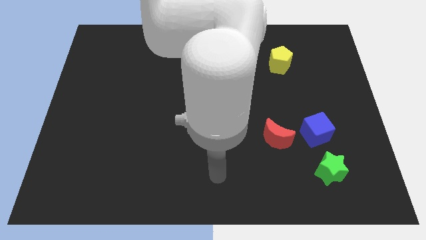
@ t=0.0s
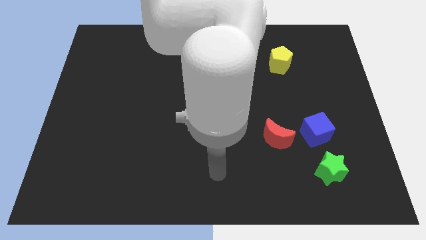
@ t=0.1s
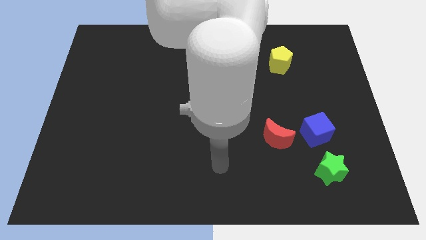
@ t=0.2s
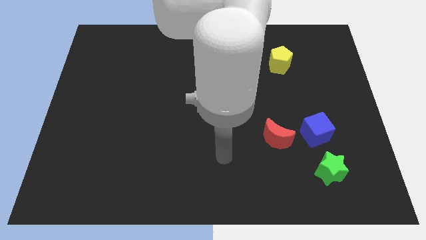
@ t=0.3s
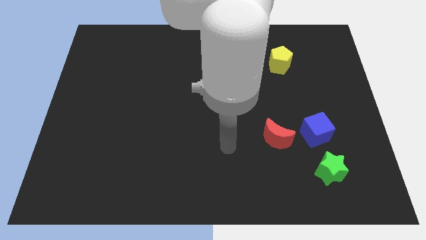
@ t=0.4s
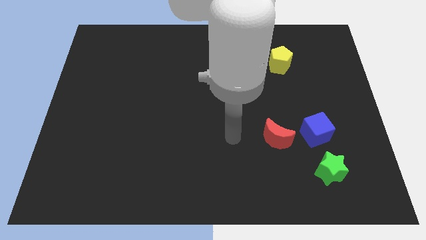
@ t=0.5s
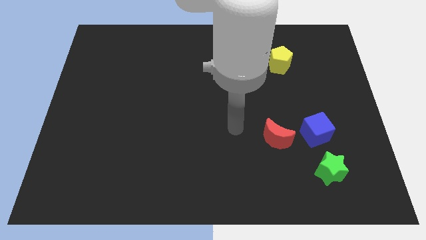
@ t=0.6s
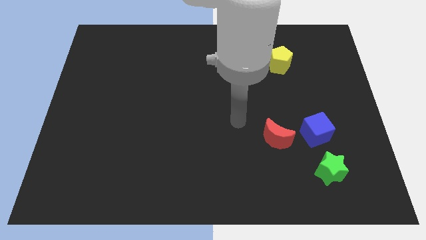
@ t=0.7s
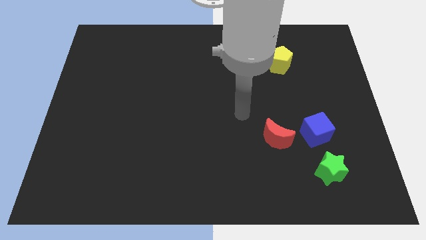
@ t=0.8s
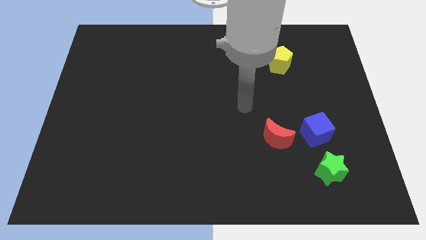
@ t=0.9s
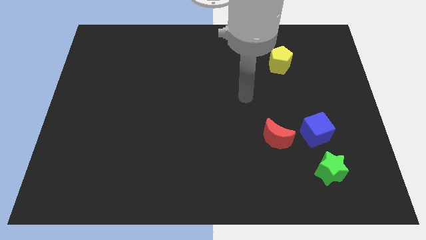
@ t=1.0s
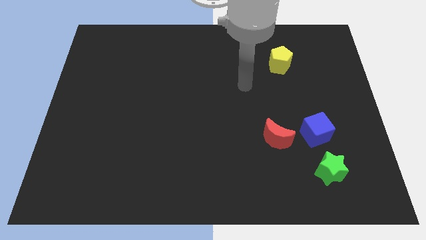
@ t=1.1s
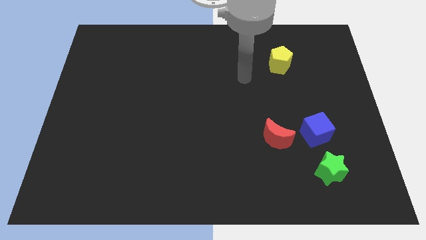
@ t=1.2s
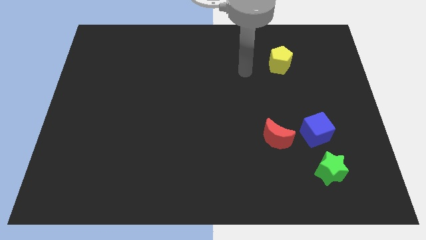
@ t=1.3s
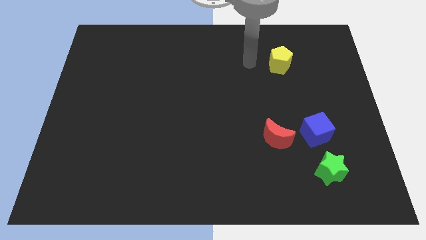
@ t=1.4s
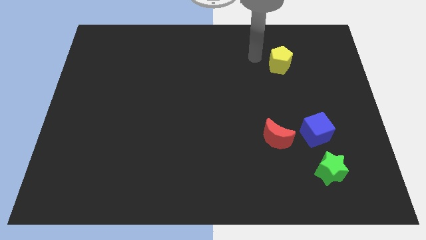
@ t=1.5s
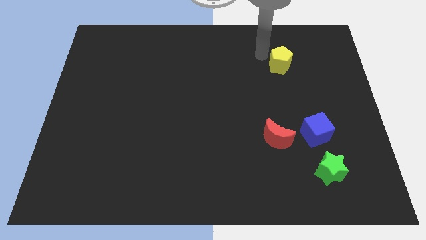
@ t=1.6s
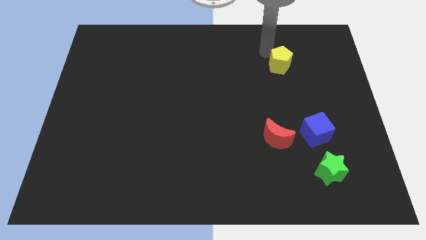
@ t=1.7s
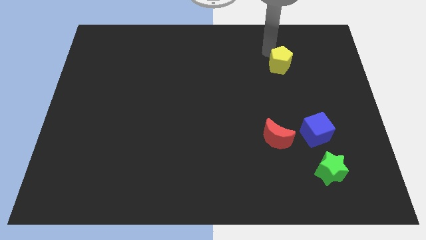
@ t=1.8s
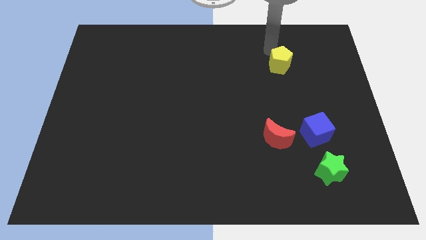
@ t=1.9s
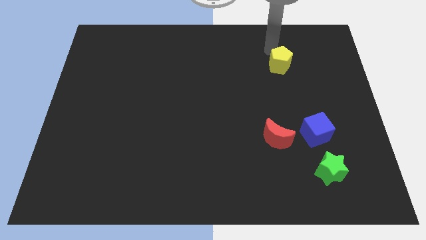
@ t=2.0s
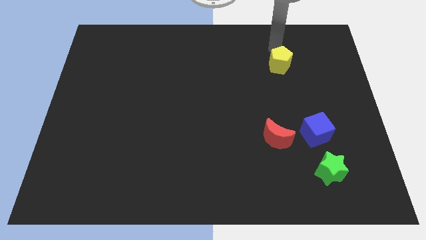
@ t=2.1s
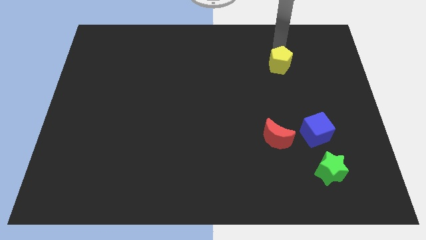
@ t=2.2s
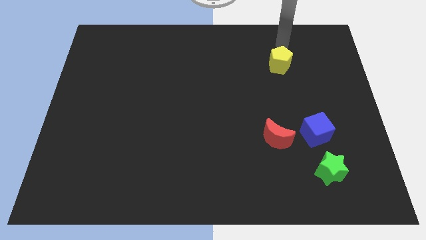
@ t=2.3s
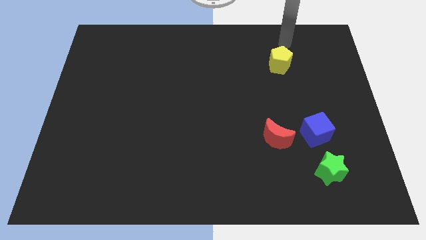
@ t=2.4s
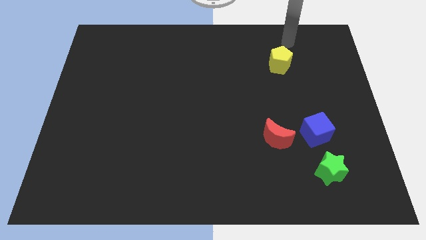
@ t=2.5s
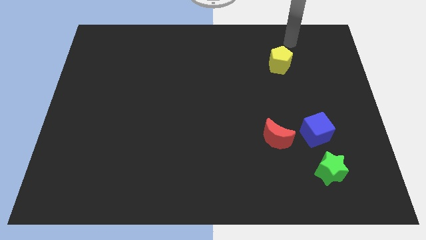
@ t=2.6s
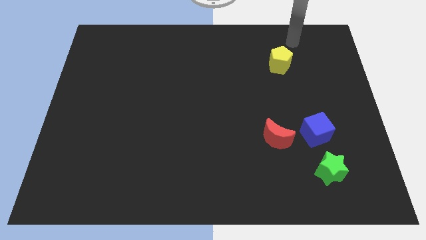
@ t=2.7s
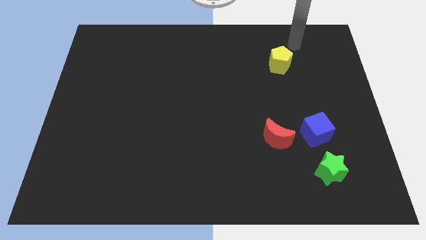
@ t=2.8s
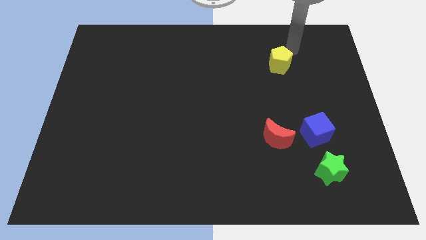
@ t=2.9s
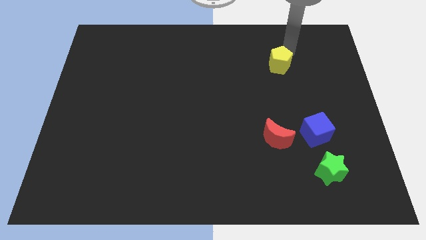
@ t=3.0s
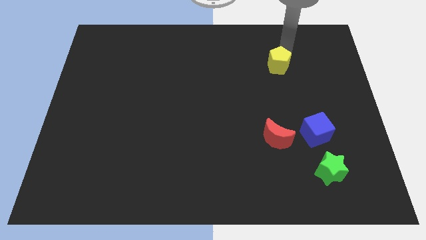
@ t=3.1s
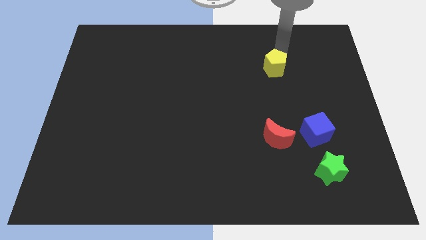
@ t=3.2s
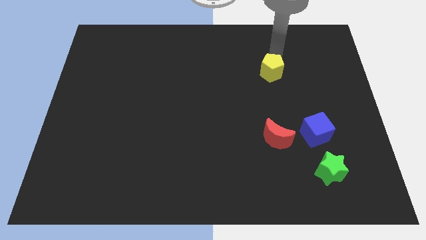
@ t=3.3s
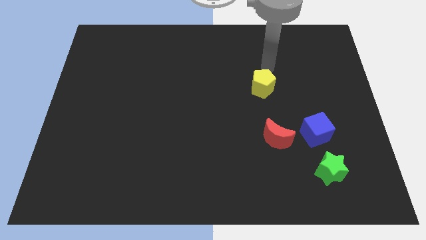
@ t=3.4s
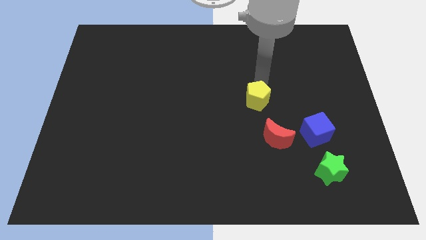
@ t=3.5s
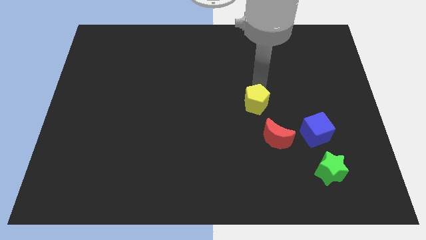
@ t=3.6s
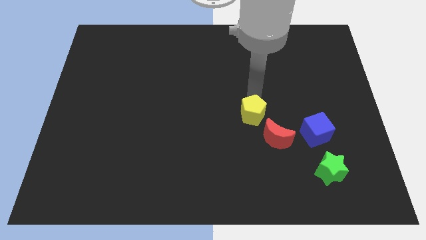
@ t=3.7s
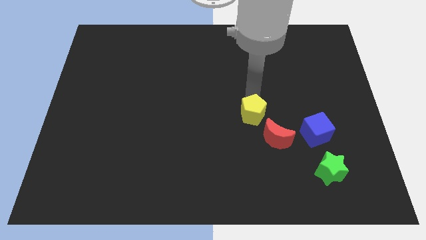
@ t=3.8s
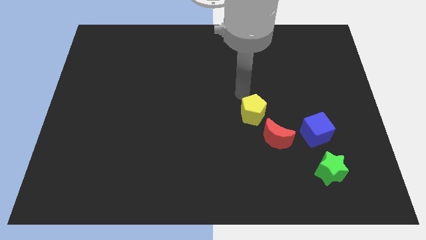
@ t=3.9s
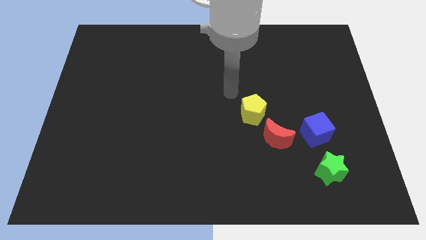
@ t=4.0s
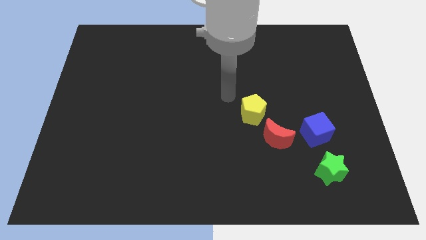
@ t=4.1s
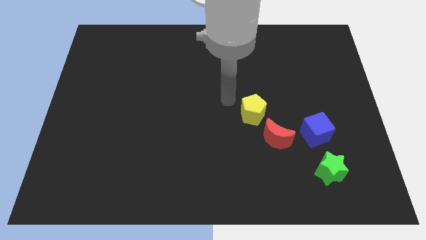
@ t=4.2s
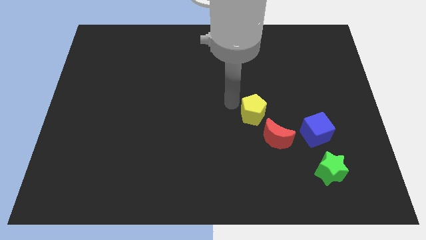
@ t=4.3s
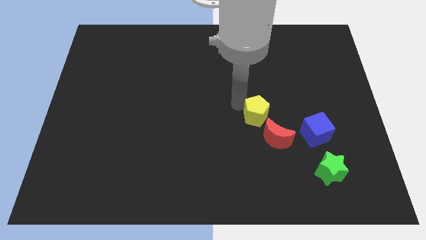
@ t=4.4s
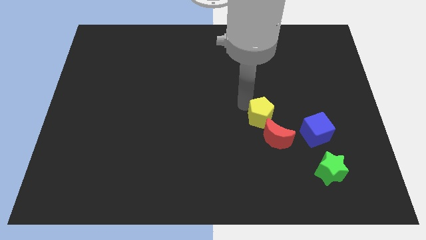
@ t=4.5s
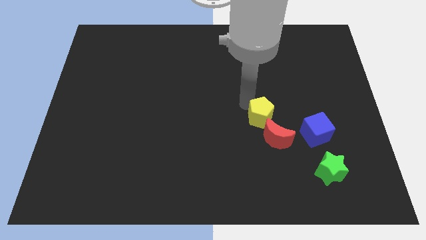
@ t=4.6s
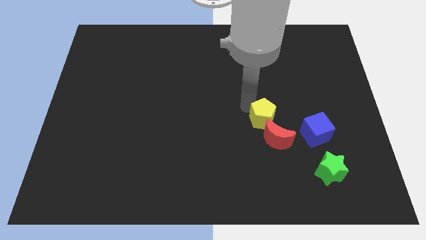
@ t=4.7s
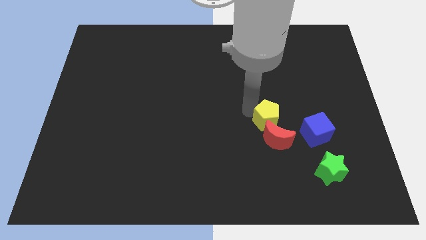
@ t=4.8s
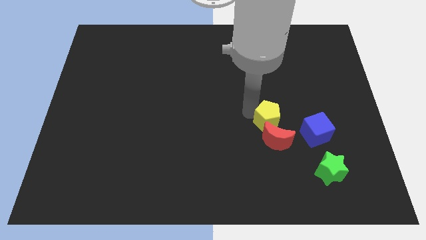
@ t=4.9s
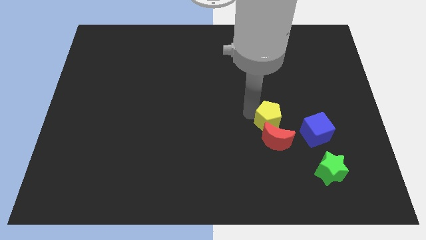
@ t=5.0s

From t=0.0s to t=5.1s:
slide the yellow pentagon close to the moon

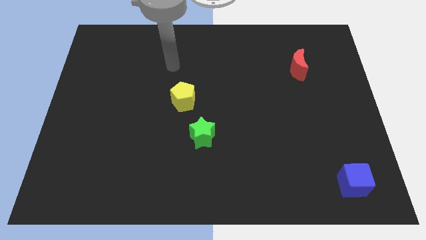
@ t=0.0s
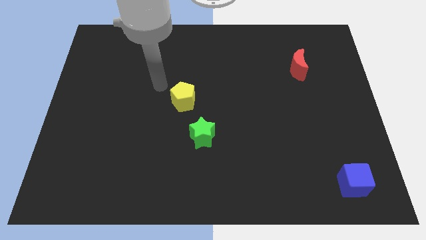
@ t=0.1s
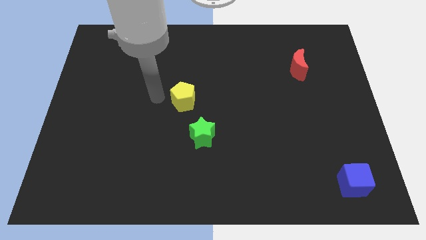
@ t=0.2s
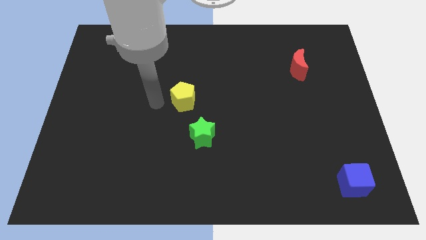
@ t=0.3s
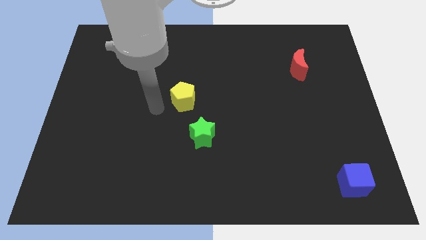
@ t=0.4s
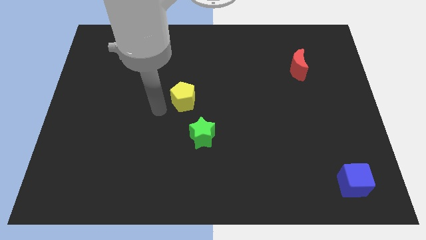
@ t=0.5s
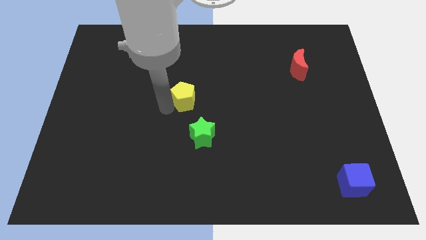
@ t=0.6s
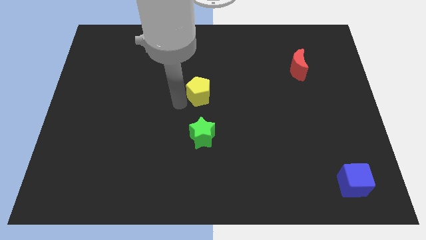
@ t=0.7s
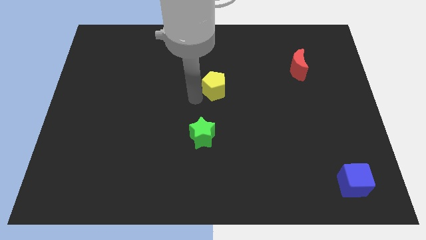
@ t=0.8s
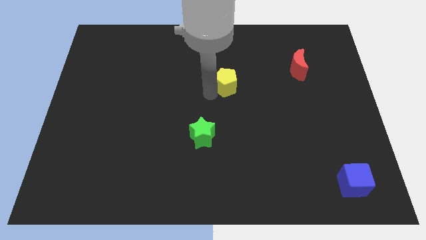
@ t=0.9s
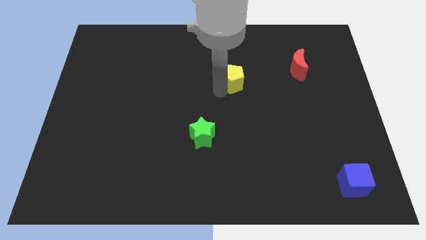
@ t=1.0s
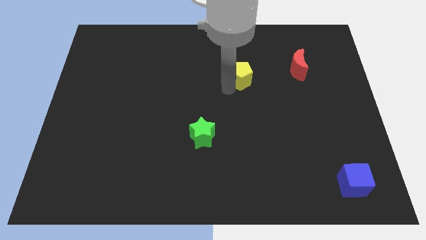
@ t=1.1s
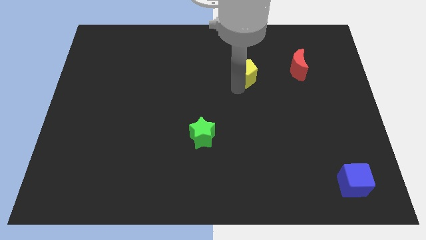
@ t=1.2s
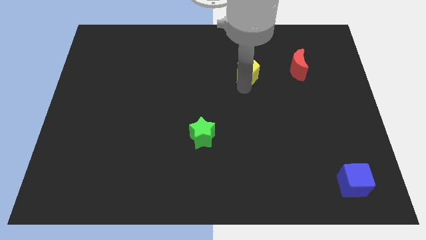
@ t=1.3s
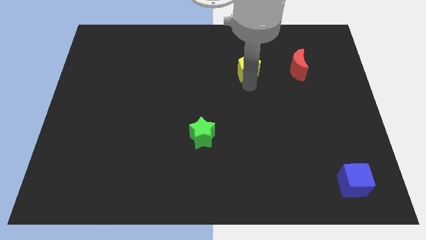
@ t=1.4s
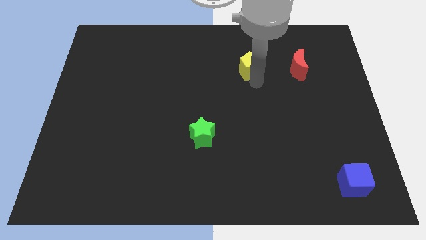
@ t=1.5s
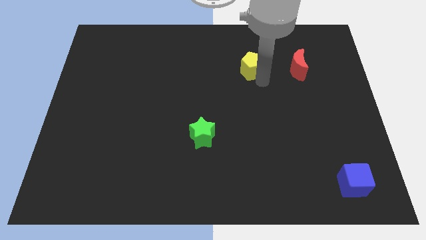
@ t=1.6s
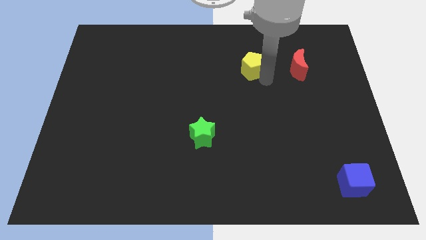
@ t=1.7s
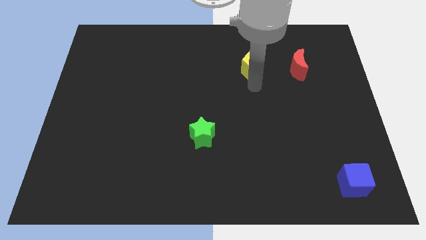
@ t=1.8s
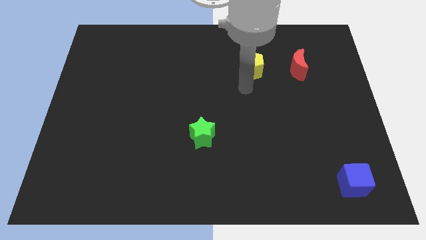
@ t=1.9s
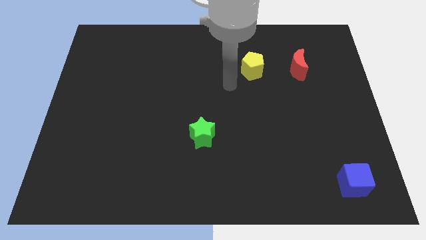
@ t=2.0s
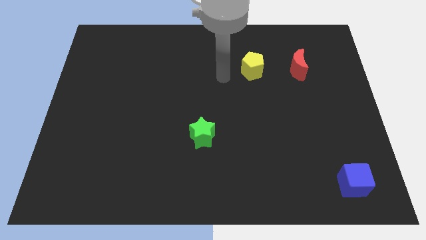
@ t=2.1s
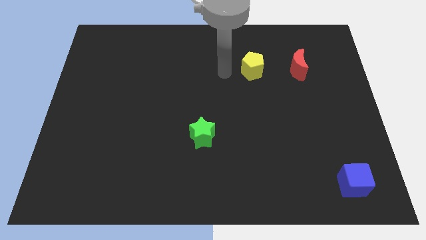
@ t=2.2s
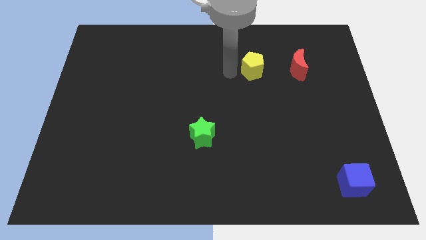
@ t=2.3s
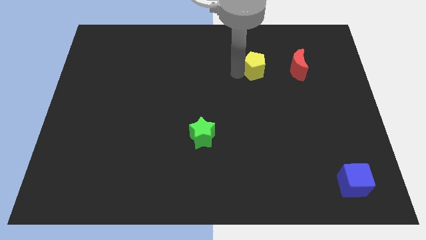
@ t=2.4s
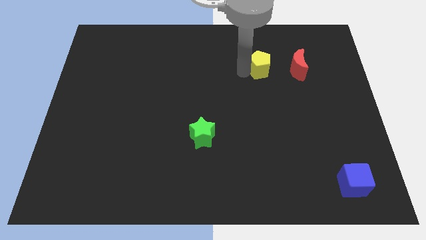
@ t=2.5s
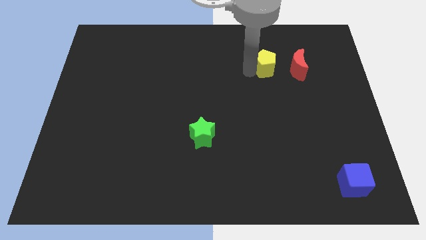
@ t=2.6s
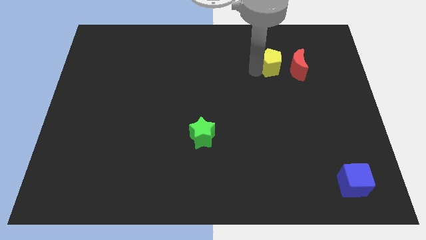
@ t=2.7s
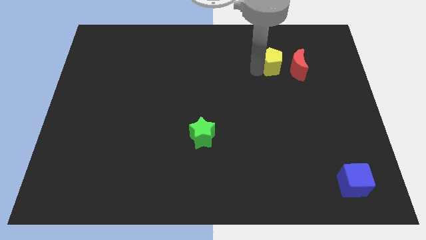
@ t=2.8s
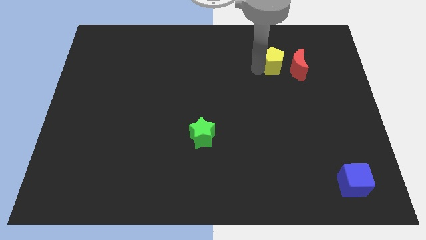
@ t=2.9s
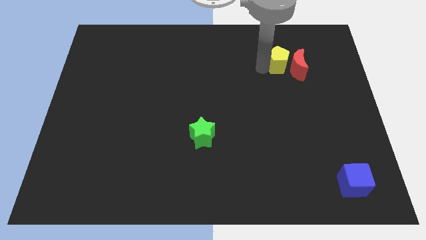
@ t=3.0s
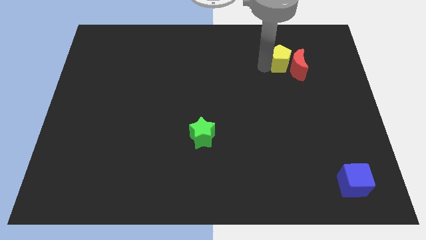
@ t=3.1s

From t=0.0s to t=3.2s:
push the pentagon to the red block

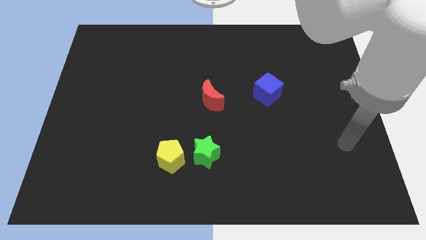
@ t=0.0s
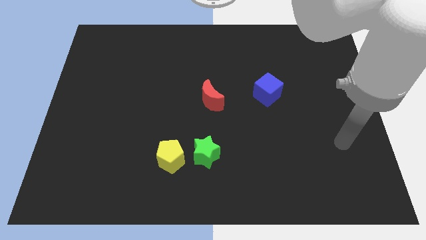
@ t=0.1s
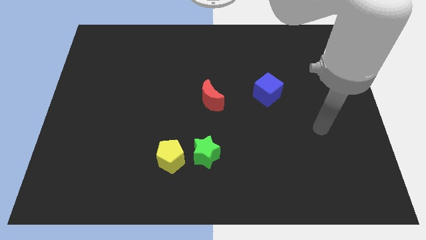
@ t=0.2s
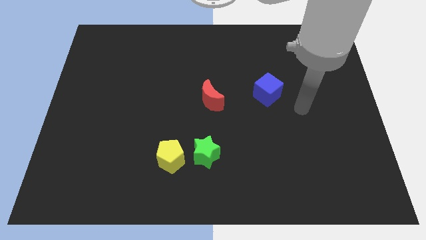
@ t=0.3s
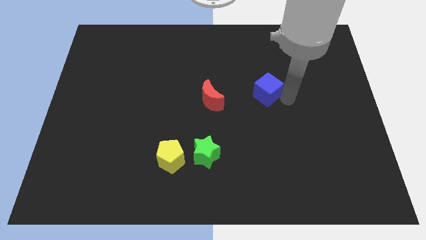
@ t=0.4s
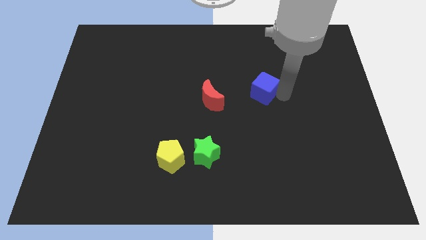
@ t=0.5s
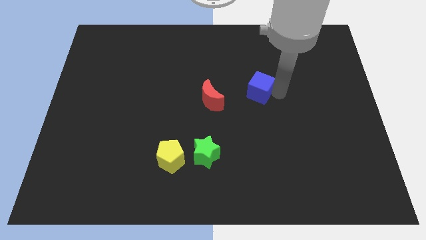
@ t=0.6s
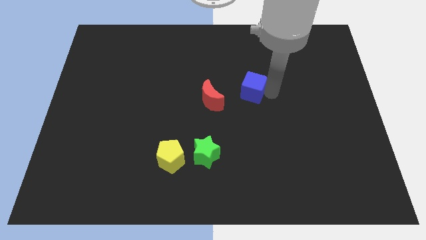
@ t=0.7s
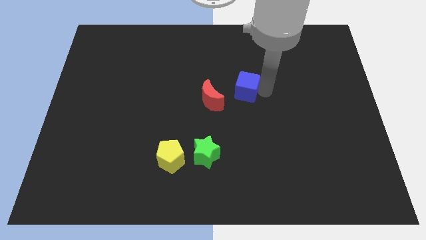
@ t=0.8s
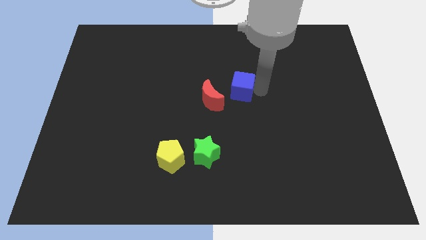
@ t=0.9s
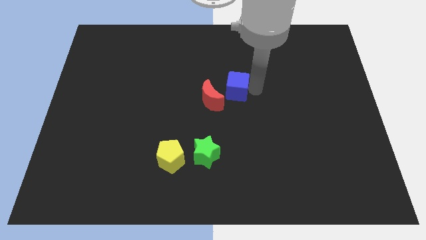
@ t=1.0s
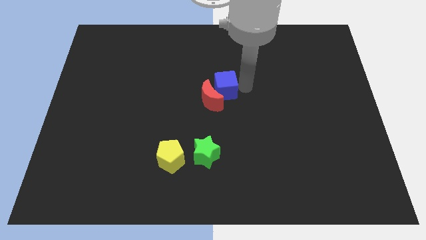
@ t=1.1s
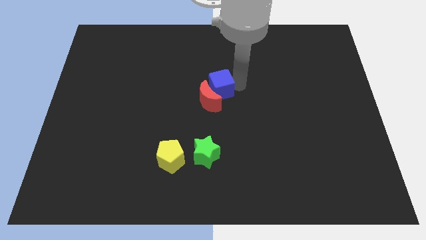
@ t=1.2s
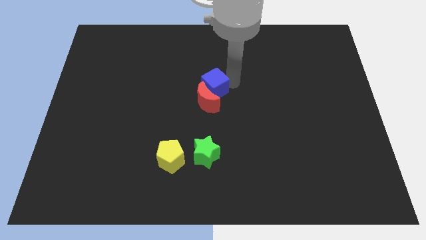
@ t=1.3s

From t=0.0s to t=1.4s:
push the blue block close to the red moon
